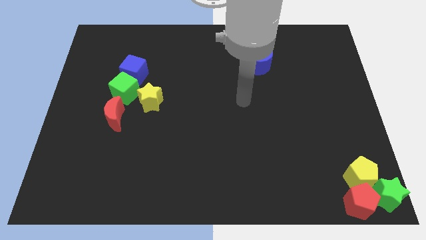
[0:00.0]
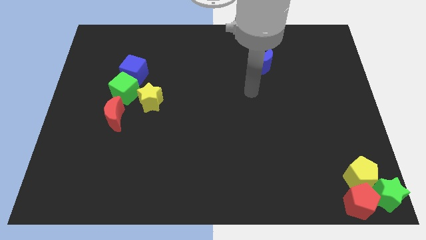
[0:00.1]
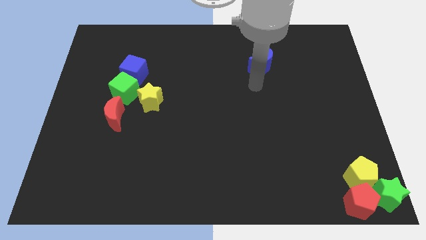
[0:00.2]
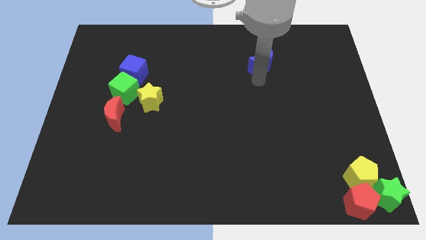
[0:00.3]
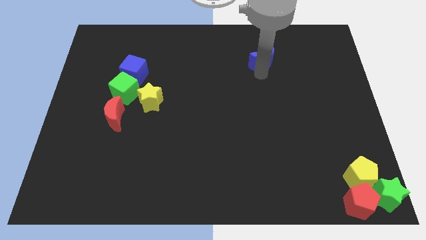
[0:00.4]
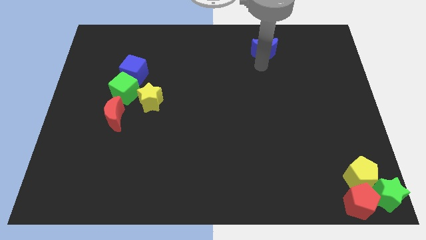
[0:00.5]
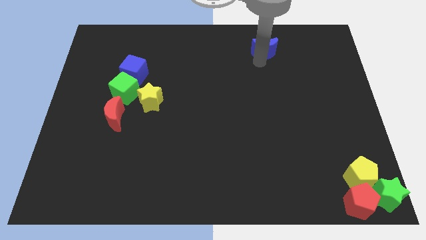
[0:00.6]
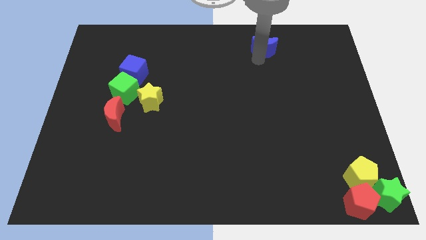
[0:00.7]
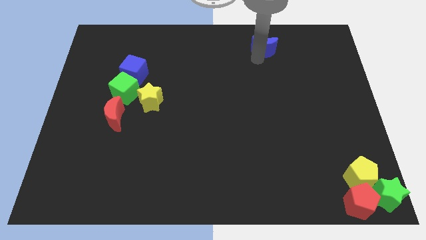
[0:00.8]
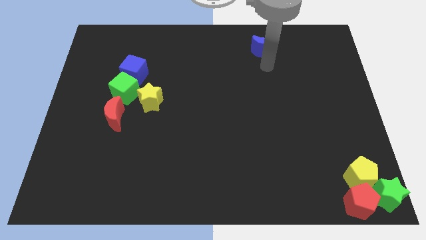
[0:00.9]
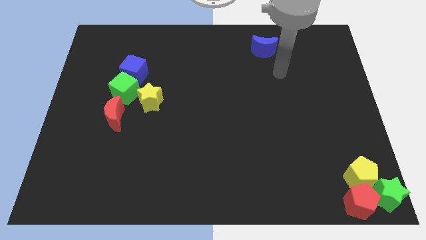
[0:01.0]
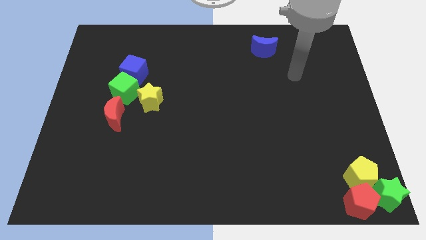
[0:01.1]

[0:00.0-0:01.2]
move the blue crescent towards the top center of the board

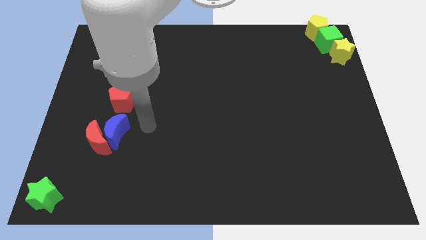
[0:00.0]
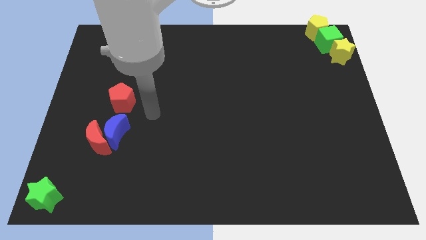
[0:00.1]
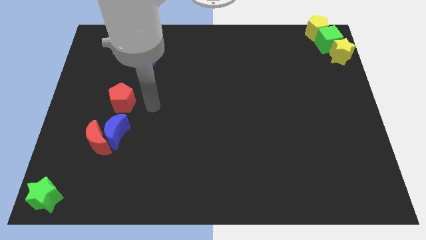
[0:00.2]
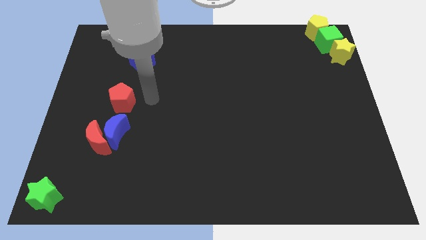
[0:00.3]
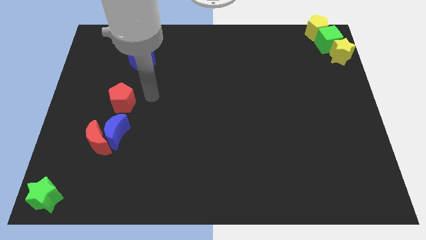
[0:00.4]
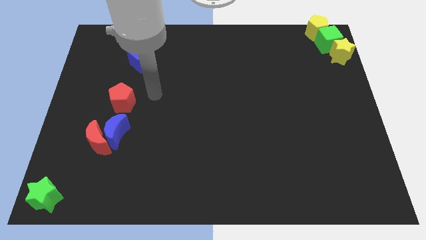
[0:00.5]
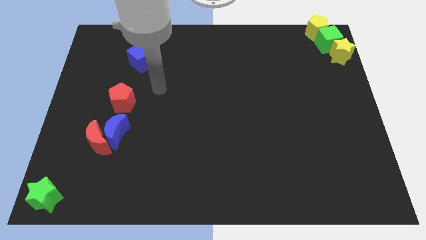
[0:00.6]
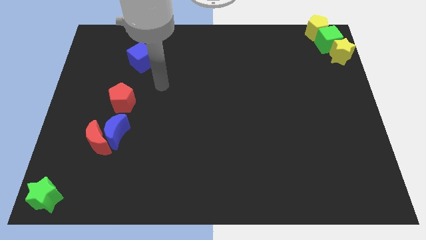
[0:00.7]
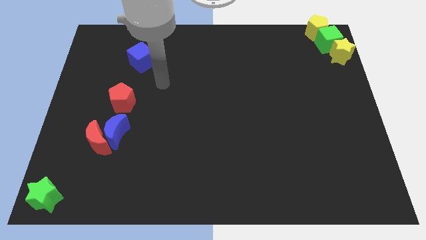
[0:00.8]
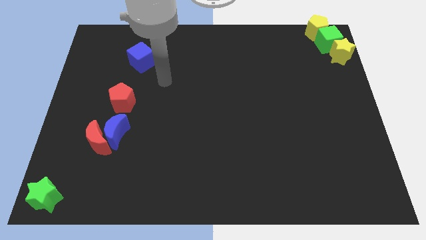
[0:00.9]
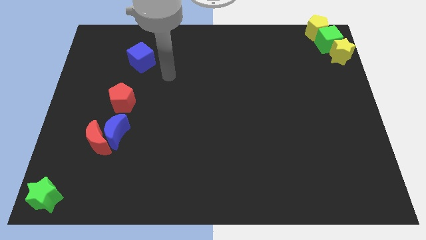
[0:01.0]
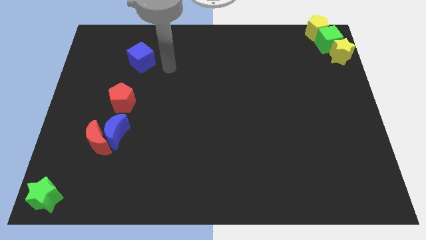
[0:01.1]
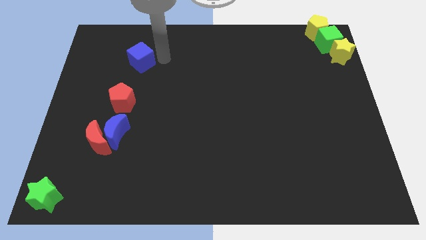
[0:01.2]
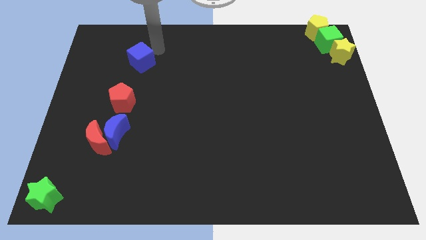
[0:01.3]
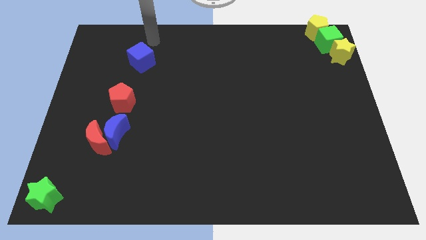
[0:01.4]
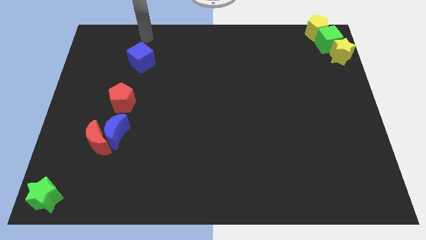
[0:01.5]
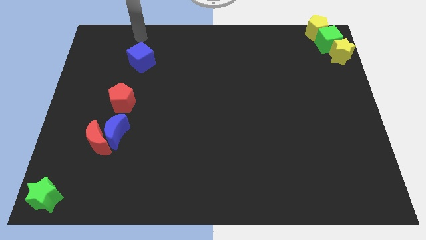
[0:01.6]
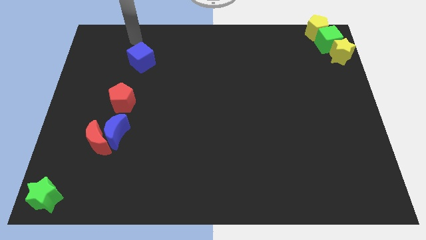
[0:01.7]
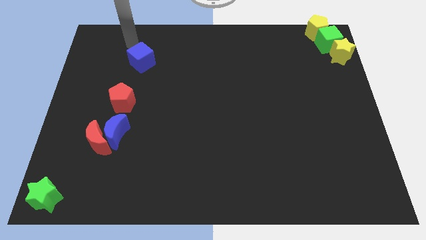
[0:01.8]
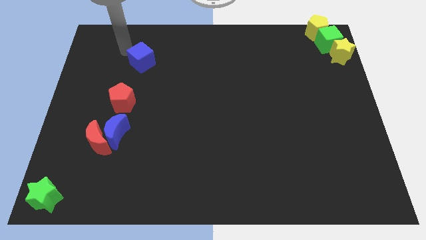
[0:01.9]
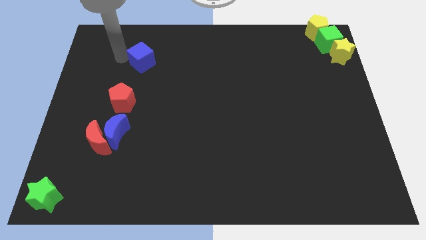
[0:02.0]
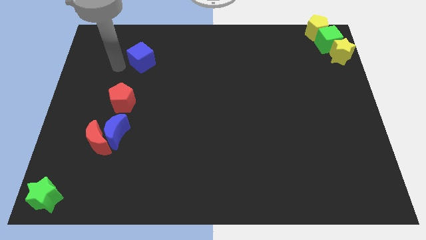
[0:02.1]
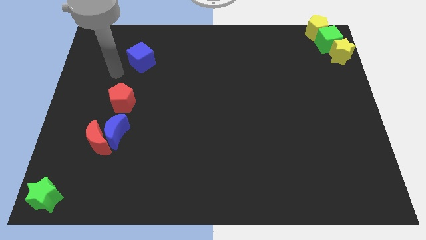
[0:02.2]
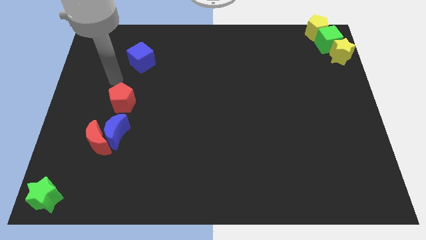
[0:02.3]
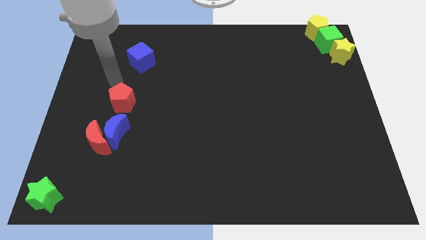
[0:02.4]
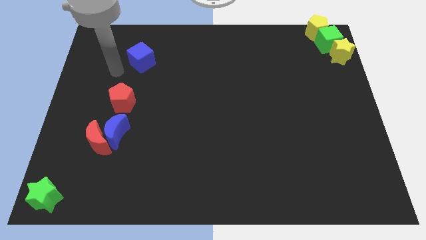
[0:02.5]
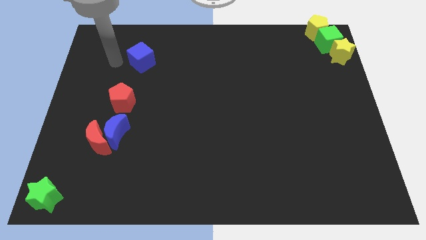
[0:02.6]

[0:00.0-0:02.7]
move the arm closer to the blue cube

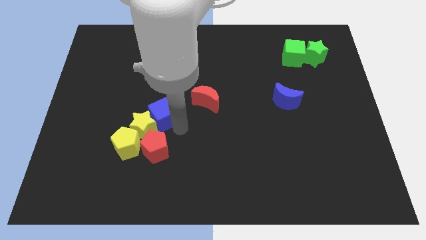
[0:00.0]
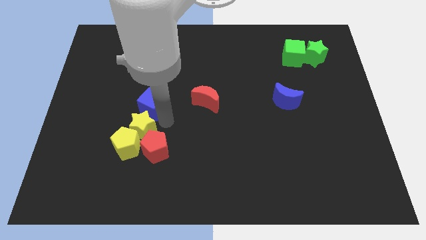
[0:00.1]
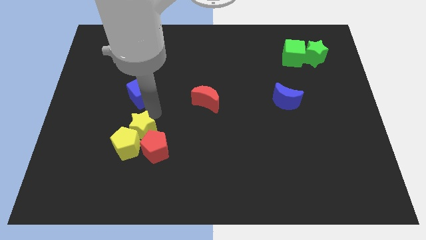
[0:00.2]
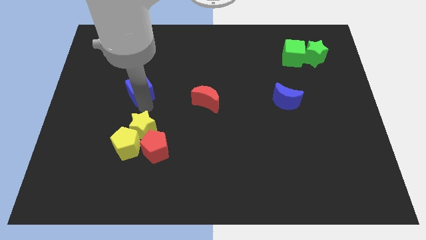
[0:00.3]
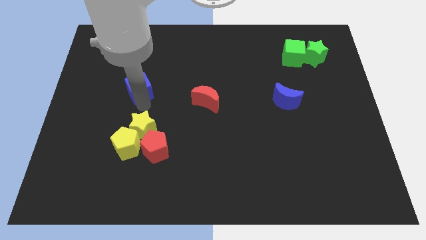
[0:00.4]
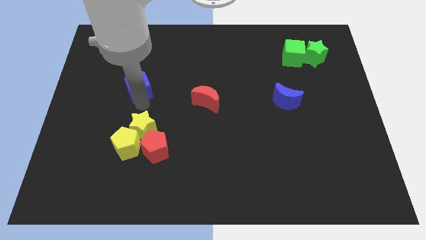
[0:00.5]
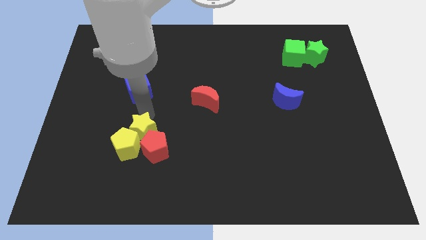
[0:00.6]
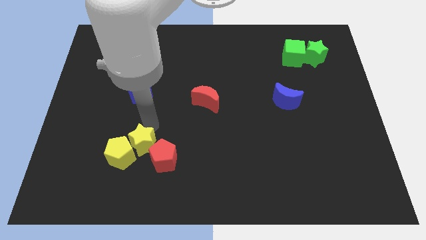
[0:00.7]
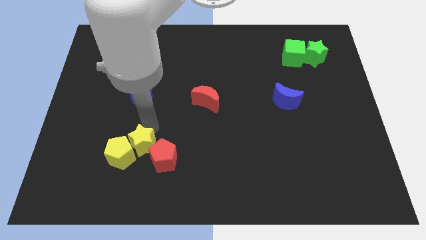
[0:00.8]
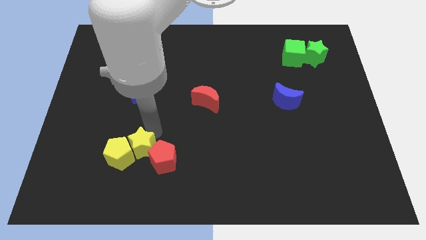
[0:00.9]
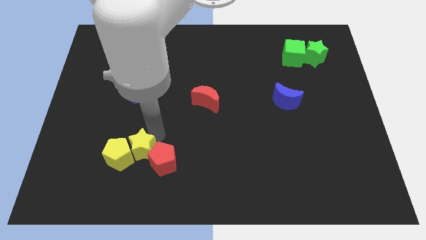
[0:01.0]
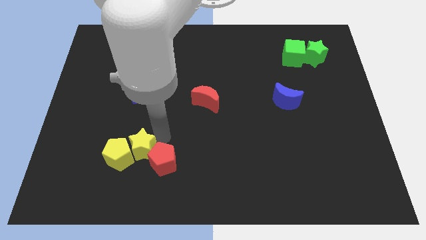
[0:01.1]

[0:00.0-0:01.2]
separate blue cube and the yellow star

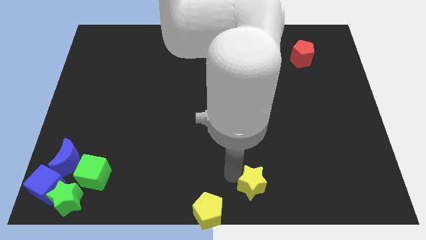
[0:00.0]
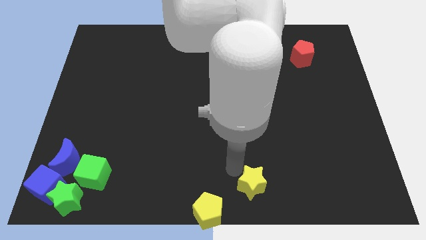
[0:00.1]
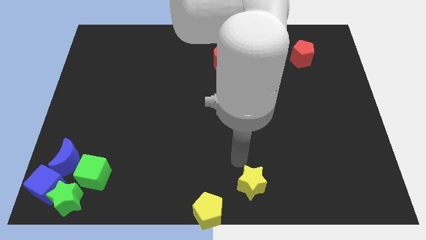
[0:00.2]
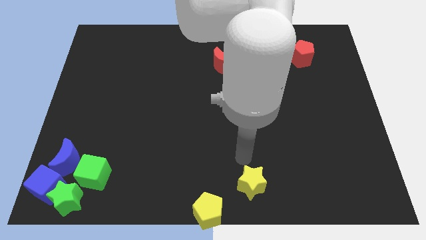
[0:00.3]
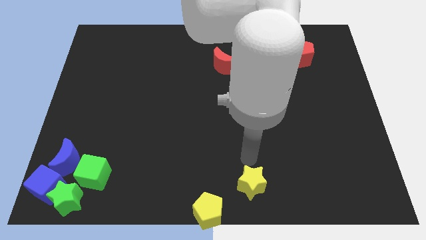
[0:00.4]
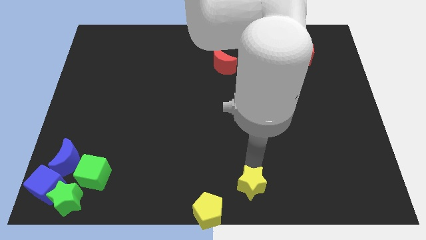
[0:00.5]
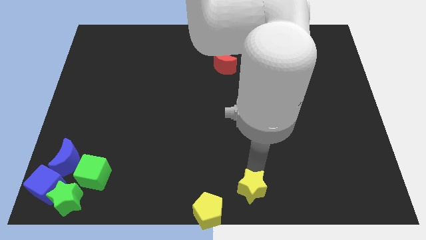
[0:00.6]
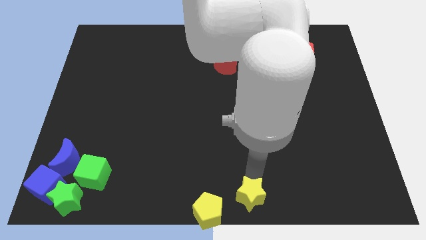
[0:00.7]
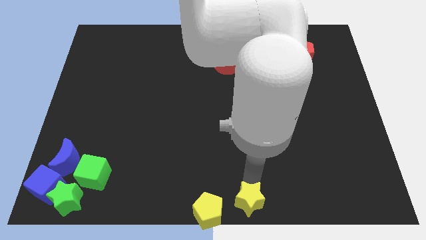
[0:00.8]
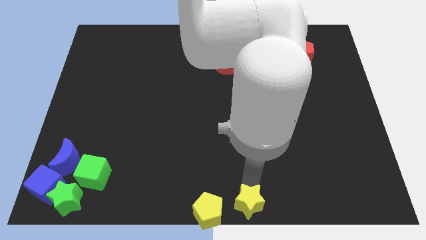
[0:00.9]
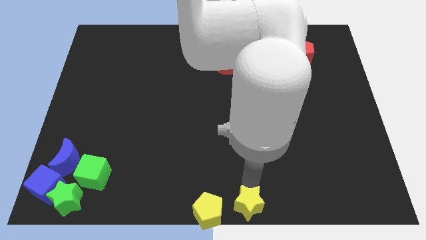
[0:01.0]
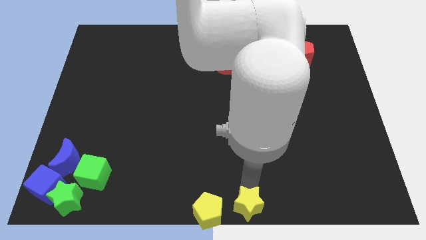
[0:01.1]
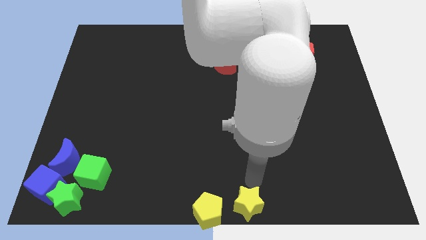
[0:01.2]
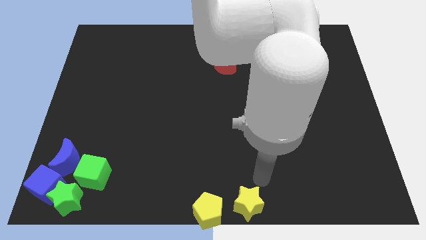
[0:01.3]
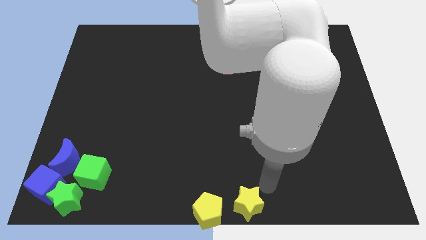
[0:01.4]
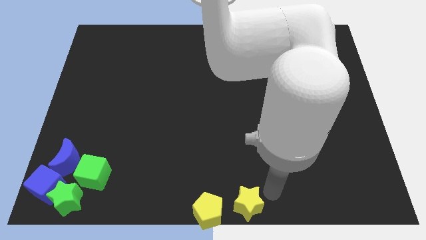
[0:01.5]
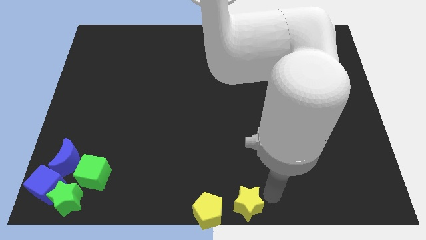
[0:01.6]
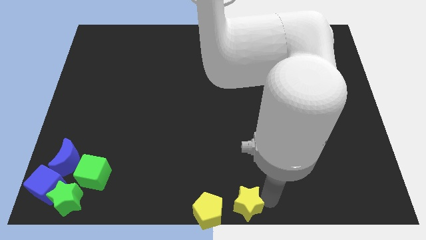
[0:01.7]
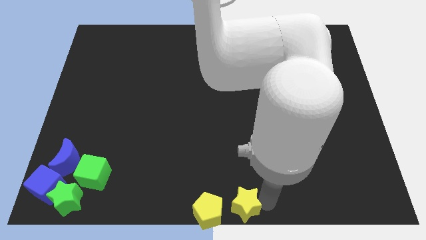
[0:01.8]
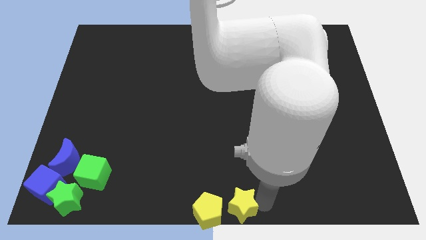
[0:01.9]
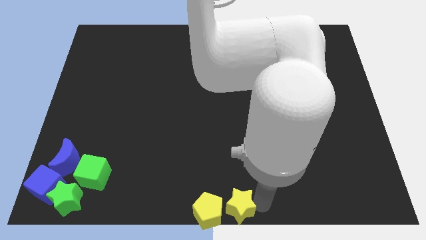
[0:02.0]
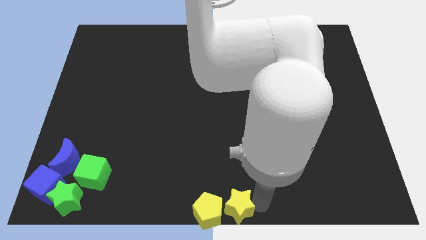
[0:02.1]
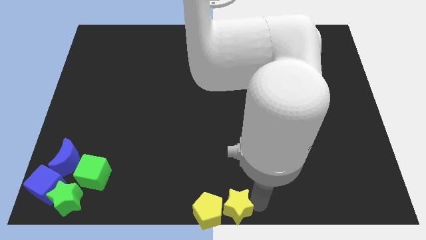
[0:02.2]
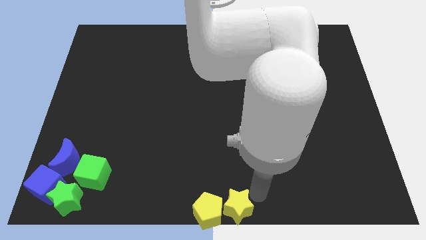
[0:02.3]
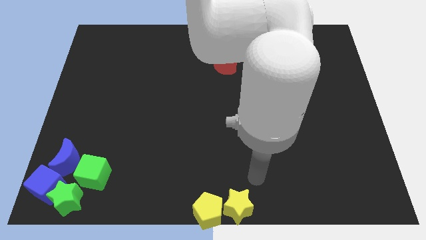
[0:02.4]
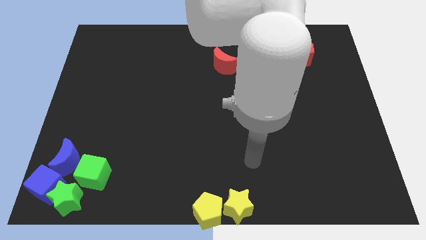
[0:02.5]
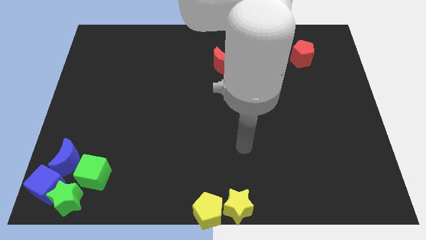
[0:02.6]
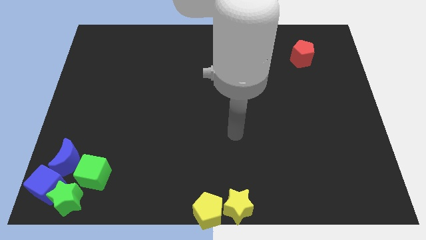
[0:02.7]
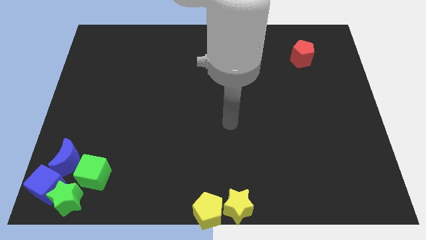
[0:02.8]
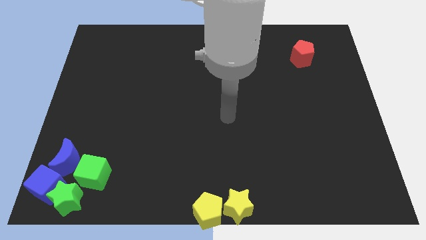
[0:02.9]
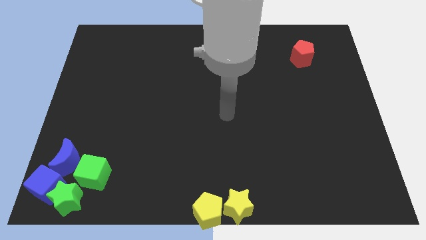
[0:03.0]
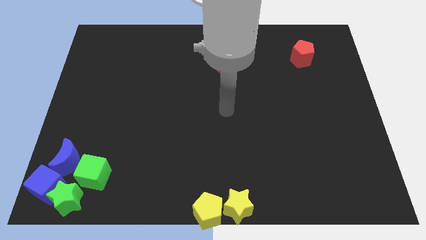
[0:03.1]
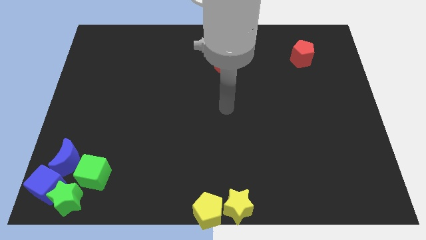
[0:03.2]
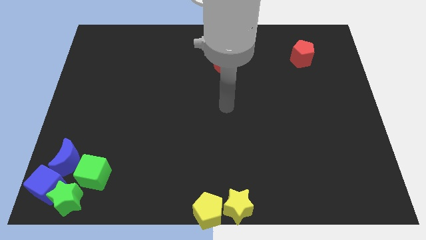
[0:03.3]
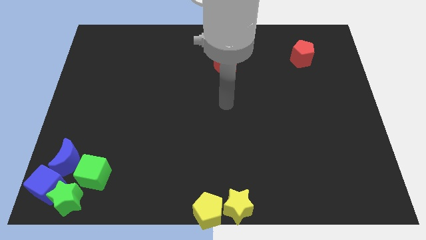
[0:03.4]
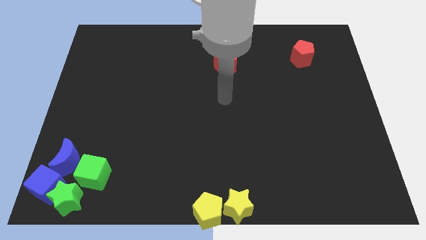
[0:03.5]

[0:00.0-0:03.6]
slightly push the yellow star to the bottom center

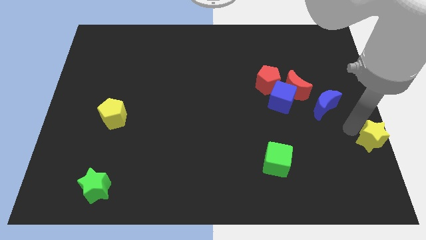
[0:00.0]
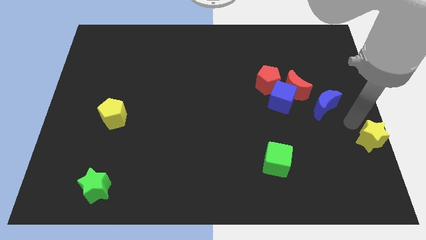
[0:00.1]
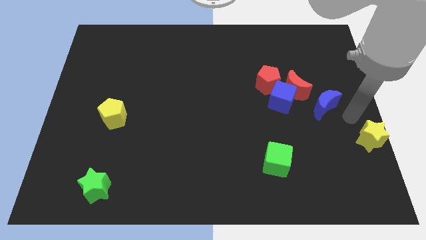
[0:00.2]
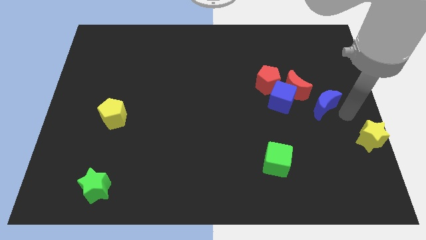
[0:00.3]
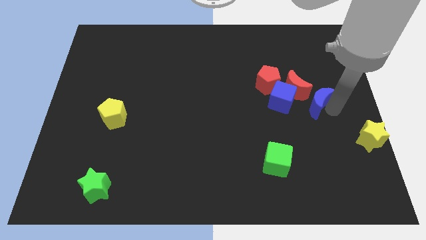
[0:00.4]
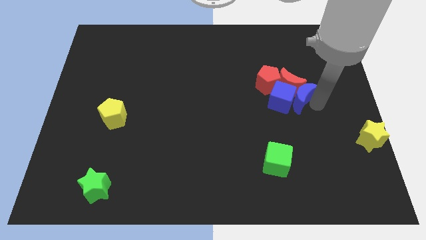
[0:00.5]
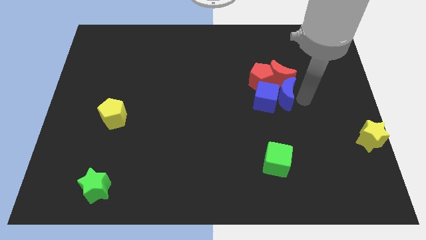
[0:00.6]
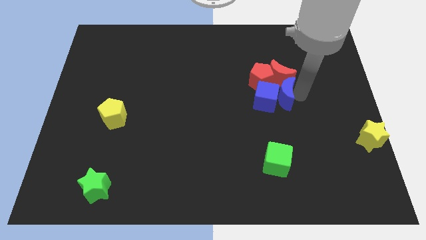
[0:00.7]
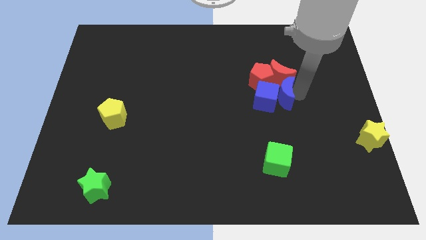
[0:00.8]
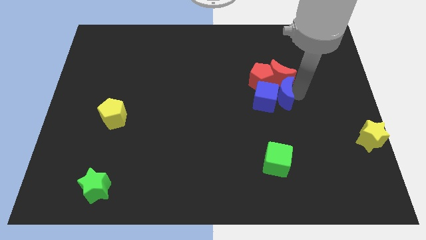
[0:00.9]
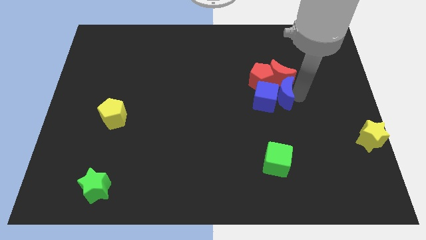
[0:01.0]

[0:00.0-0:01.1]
push the blue crescent into the group of blocks
